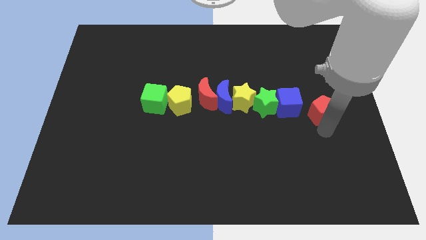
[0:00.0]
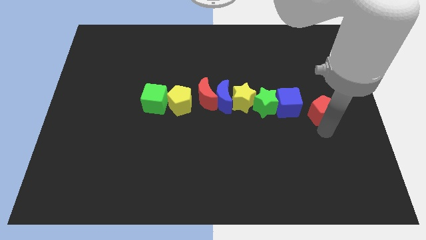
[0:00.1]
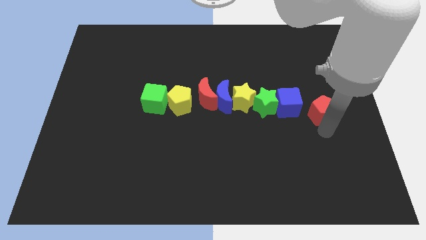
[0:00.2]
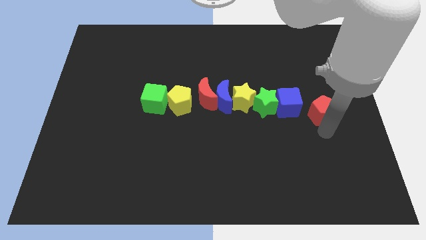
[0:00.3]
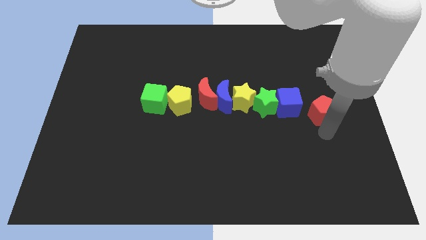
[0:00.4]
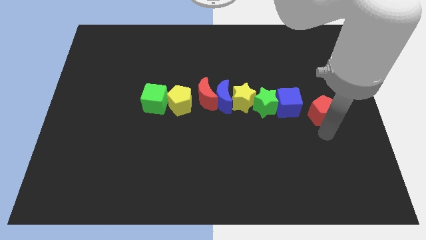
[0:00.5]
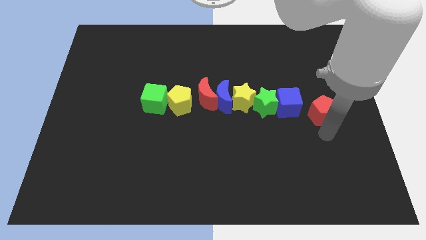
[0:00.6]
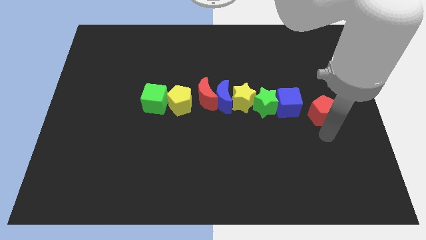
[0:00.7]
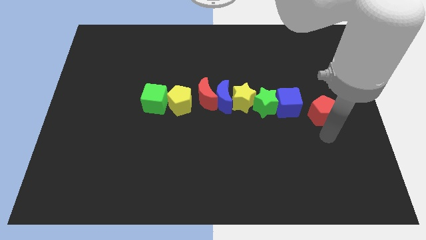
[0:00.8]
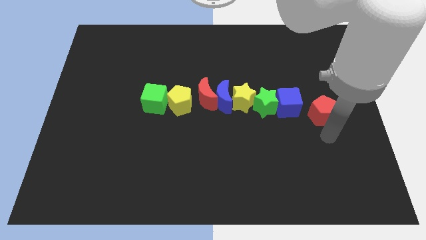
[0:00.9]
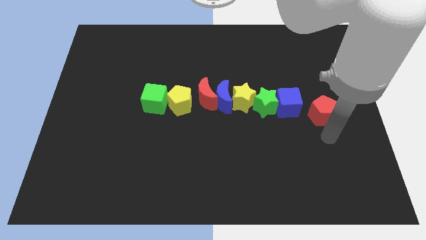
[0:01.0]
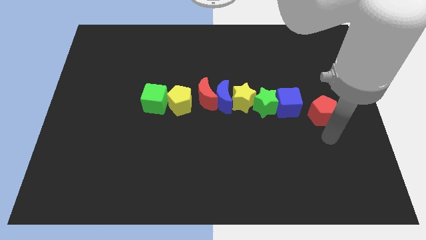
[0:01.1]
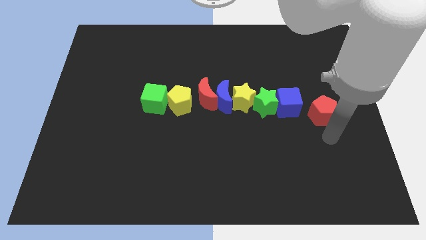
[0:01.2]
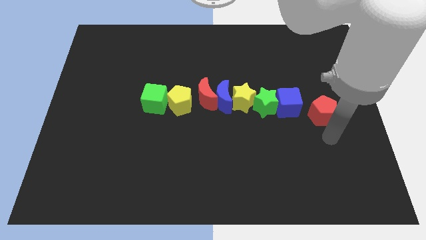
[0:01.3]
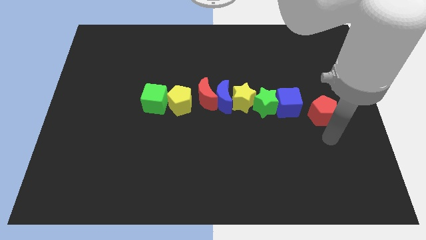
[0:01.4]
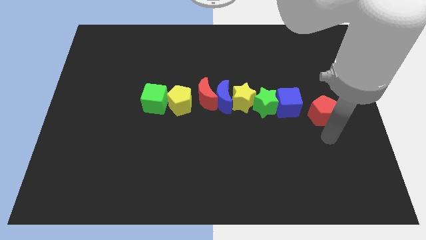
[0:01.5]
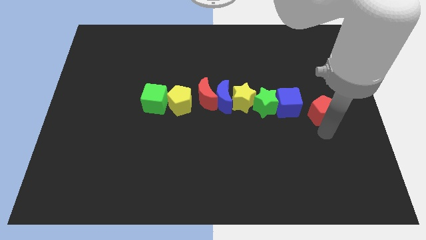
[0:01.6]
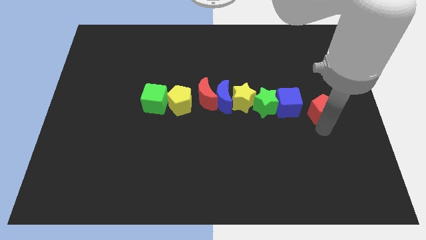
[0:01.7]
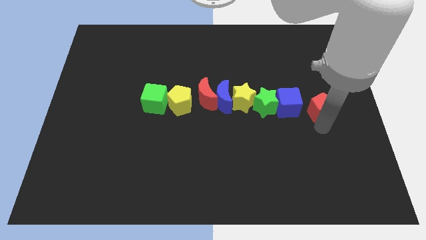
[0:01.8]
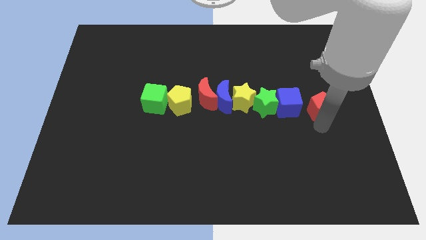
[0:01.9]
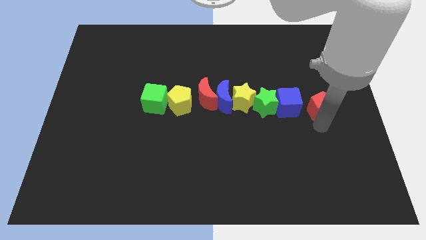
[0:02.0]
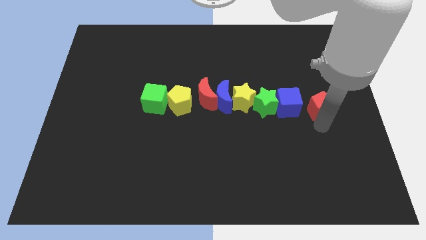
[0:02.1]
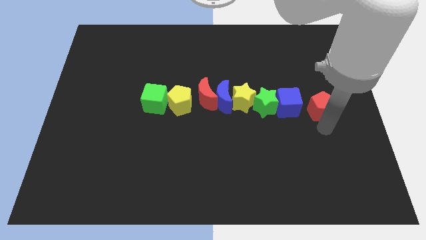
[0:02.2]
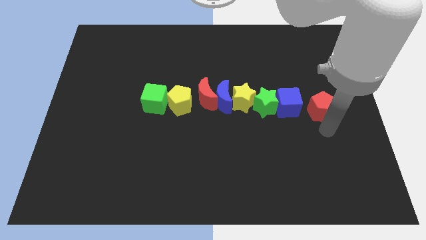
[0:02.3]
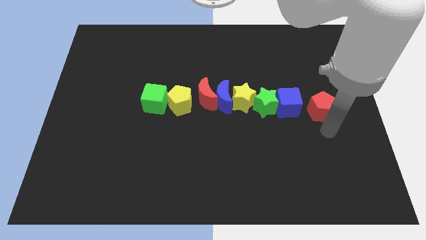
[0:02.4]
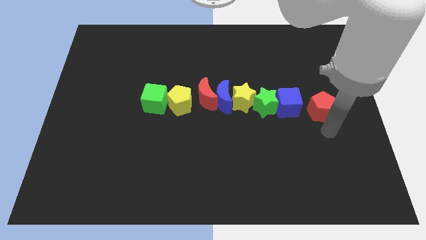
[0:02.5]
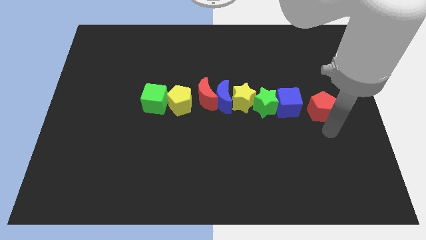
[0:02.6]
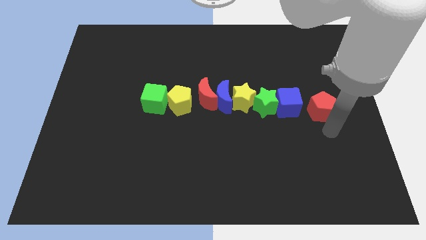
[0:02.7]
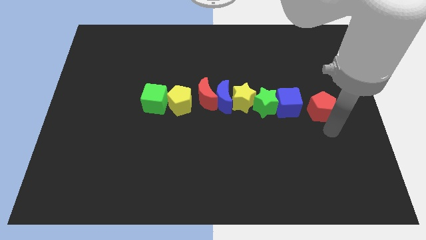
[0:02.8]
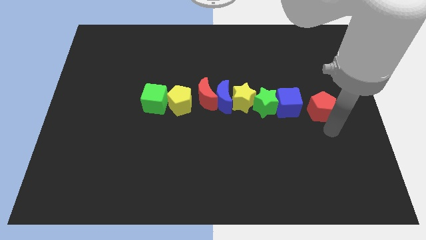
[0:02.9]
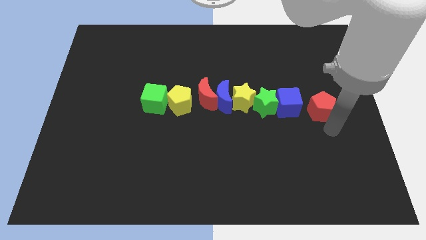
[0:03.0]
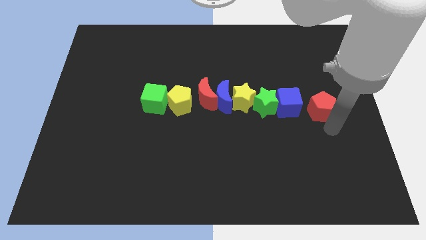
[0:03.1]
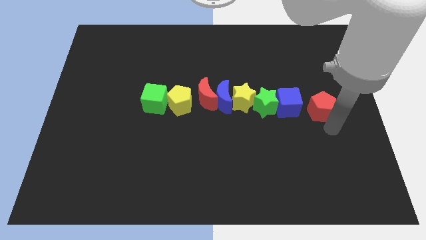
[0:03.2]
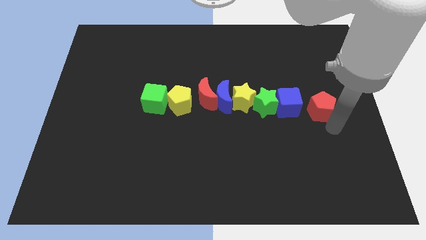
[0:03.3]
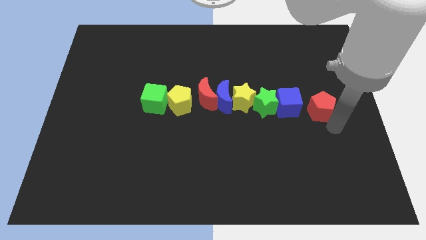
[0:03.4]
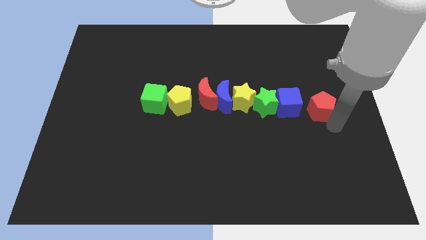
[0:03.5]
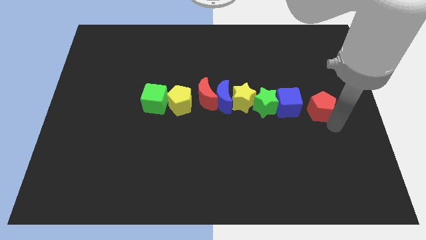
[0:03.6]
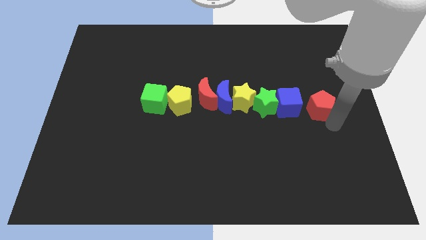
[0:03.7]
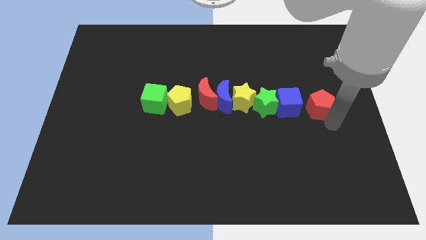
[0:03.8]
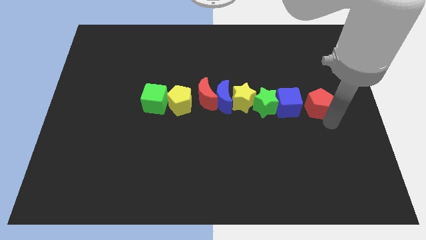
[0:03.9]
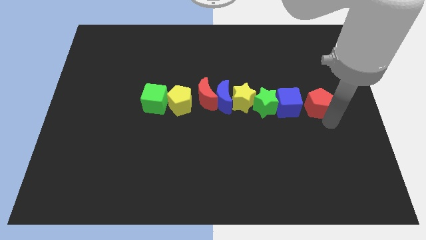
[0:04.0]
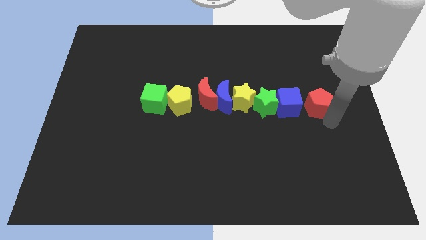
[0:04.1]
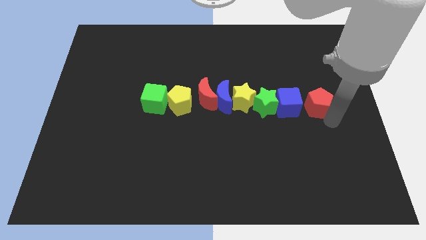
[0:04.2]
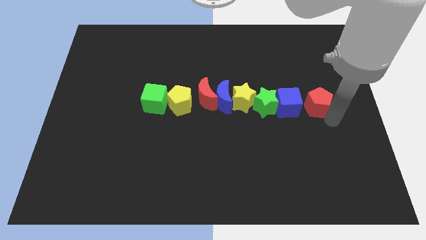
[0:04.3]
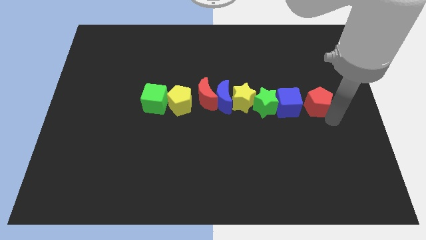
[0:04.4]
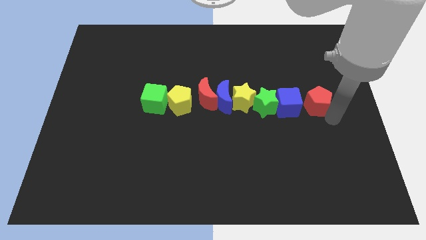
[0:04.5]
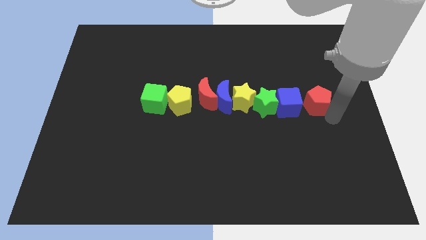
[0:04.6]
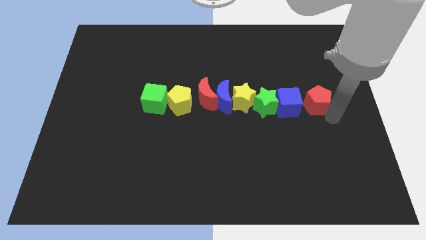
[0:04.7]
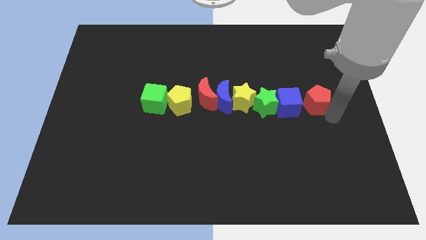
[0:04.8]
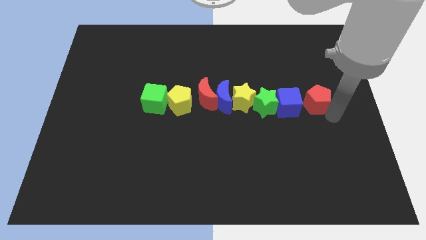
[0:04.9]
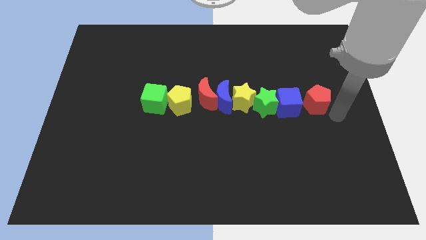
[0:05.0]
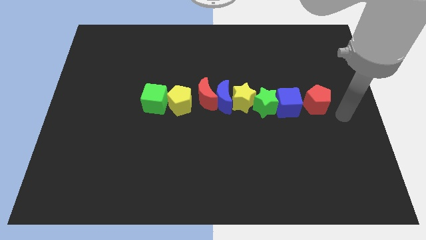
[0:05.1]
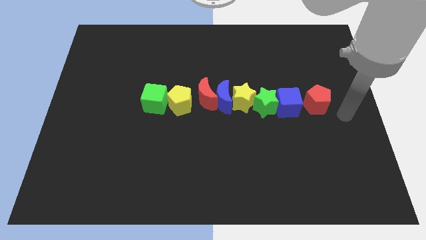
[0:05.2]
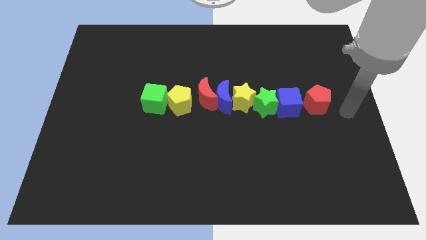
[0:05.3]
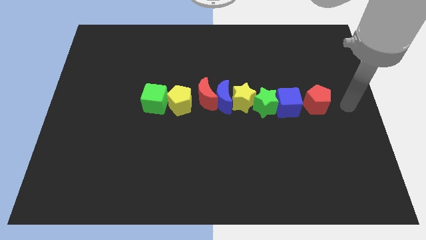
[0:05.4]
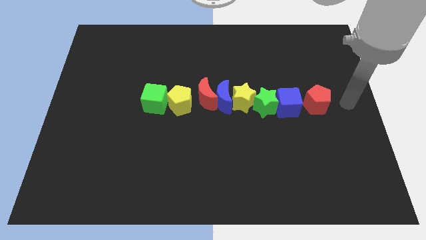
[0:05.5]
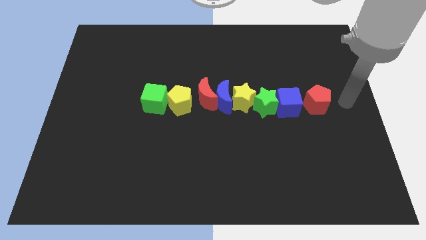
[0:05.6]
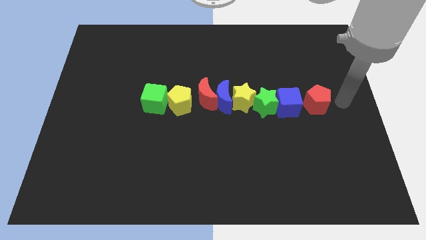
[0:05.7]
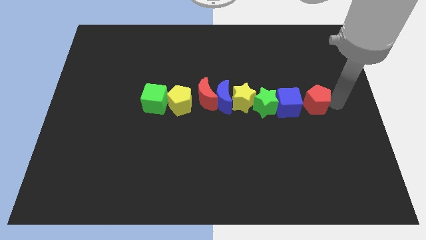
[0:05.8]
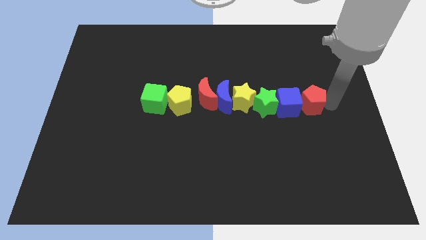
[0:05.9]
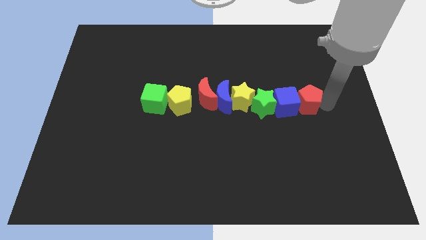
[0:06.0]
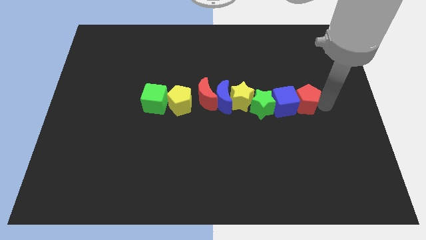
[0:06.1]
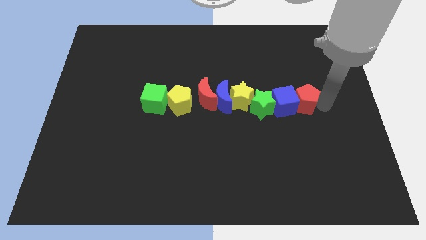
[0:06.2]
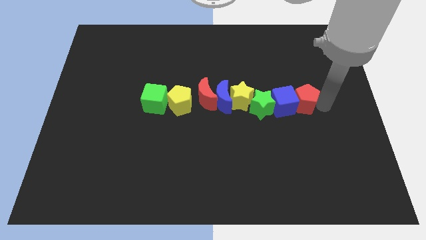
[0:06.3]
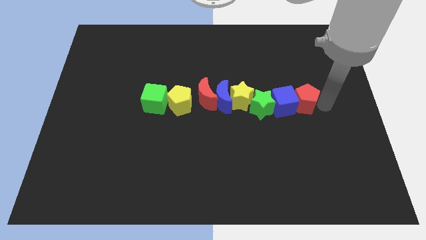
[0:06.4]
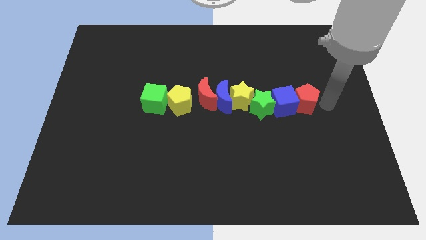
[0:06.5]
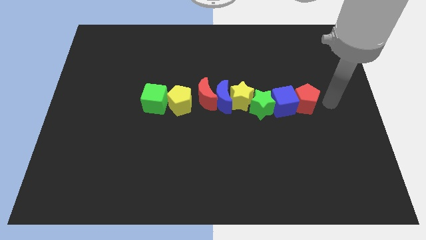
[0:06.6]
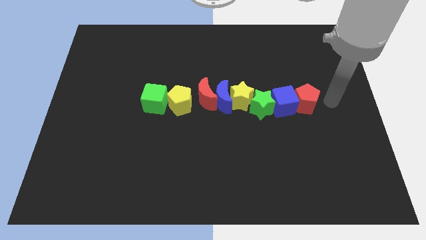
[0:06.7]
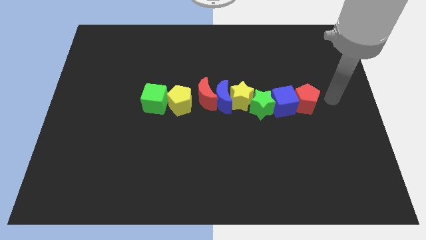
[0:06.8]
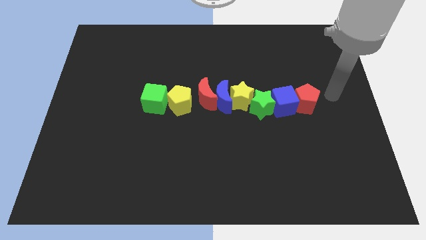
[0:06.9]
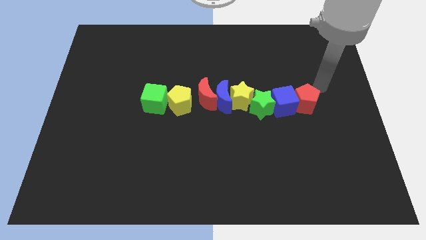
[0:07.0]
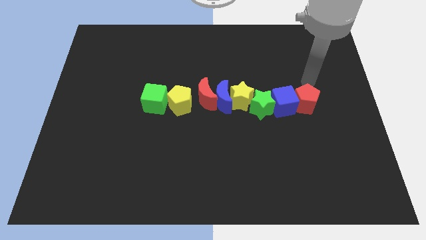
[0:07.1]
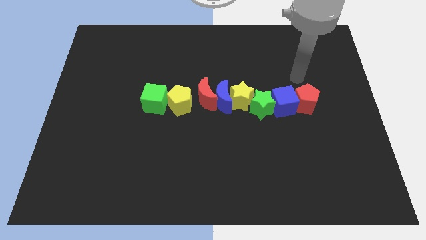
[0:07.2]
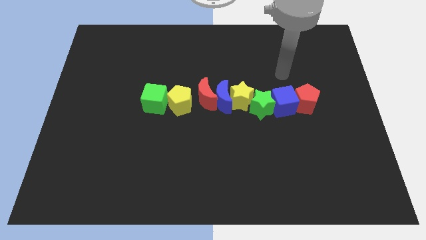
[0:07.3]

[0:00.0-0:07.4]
push red pentagon into blue cube

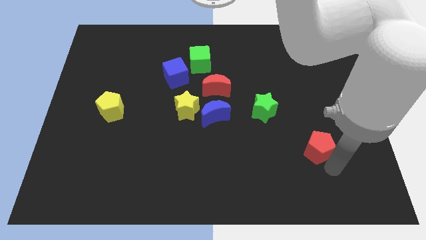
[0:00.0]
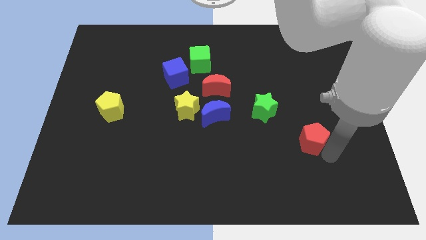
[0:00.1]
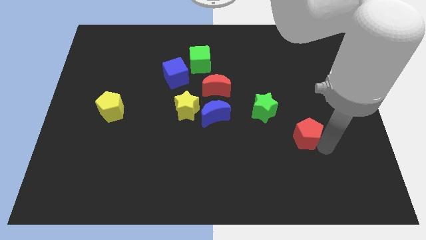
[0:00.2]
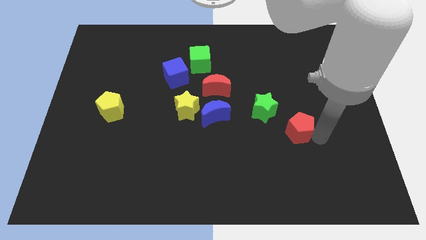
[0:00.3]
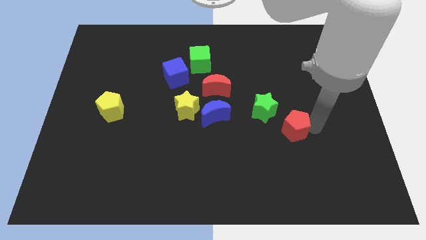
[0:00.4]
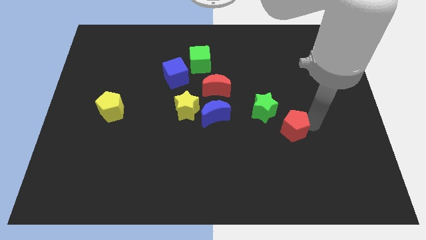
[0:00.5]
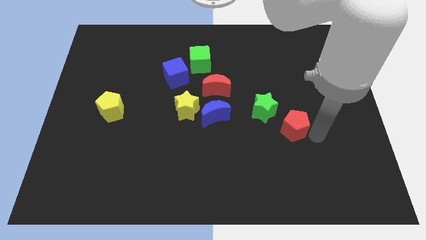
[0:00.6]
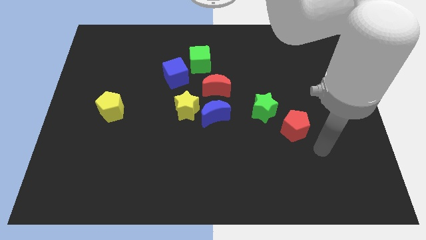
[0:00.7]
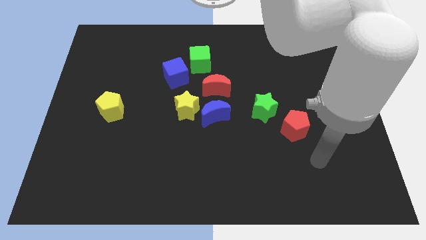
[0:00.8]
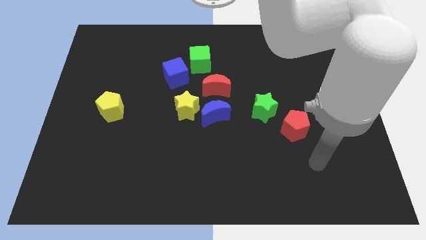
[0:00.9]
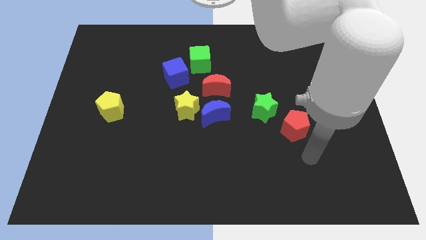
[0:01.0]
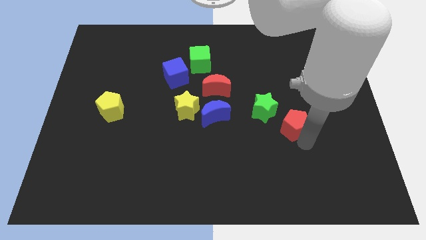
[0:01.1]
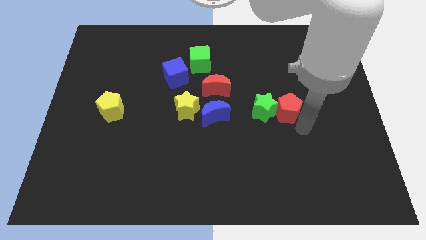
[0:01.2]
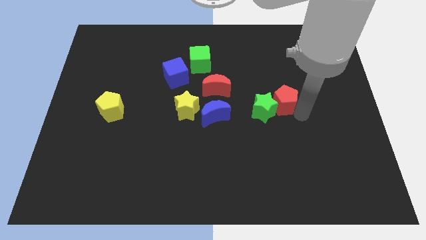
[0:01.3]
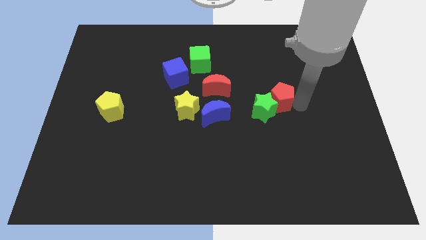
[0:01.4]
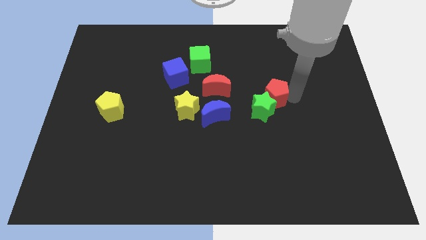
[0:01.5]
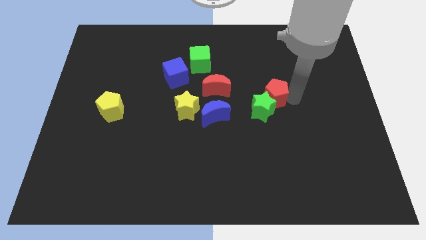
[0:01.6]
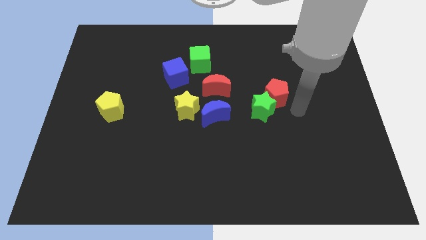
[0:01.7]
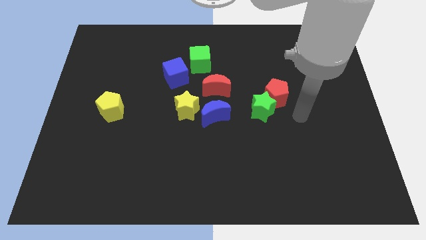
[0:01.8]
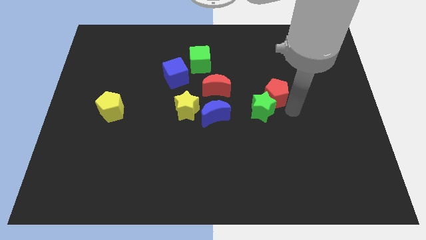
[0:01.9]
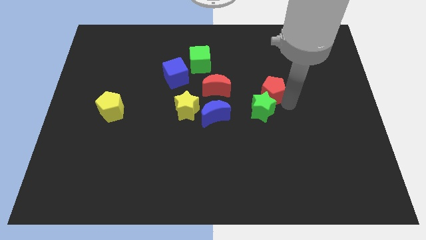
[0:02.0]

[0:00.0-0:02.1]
move the red pentagon into the green star
